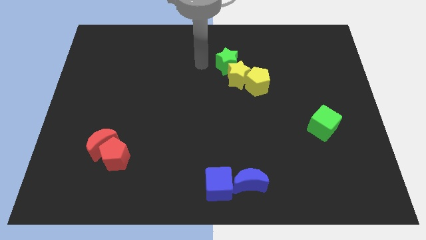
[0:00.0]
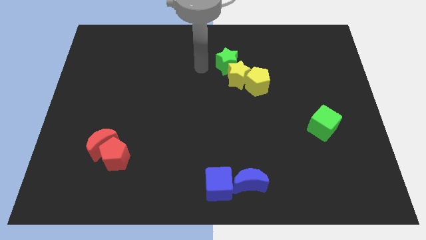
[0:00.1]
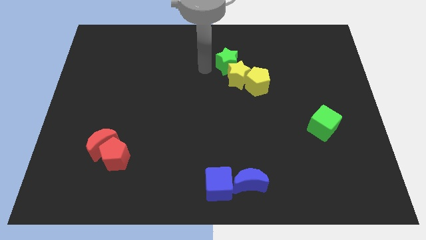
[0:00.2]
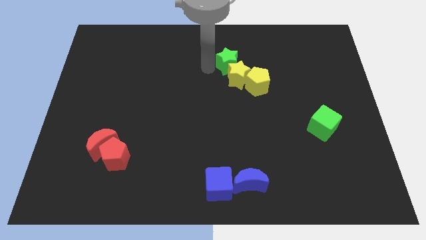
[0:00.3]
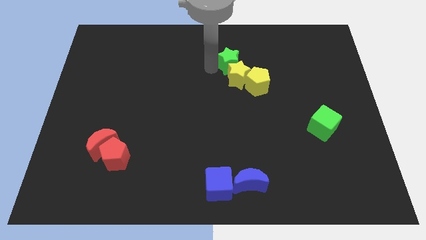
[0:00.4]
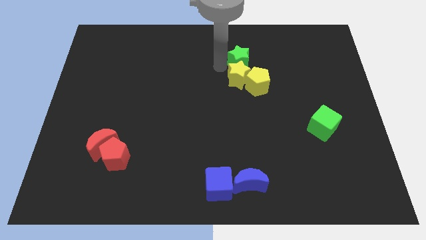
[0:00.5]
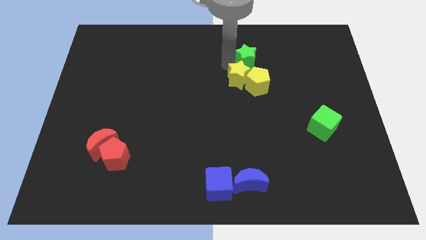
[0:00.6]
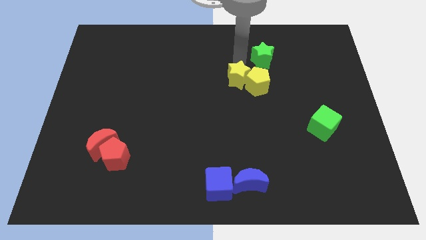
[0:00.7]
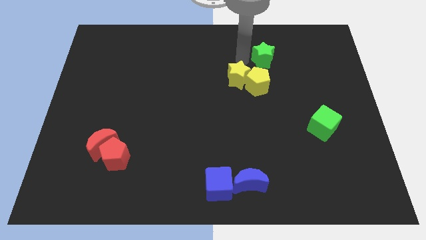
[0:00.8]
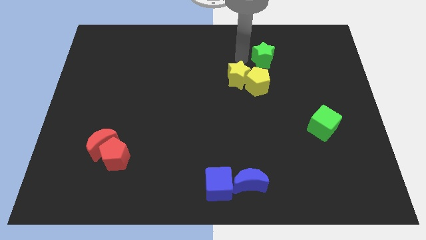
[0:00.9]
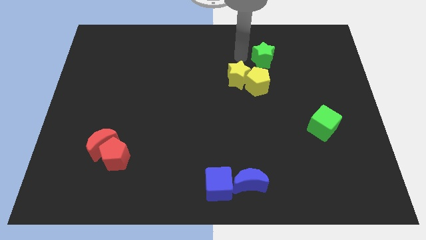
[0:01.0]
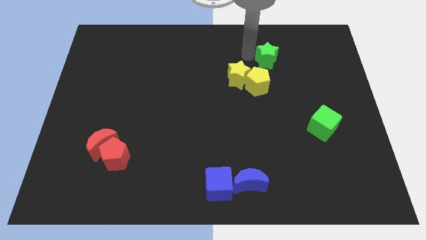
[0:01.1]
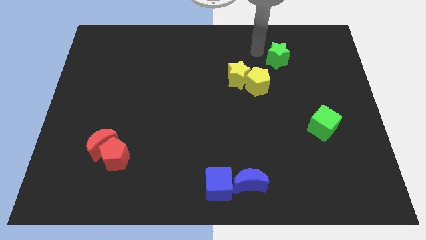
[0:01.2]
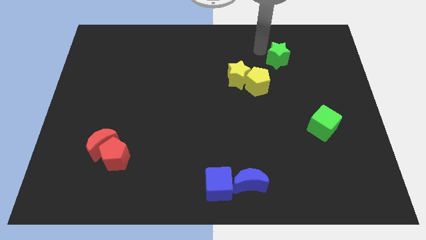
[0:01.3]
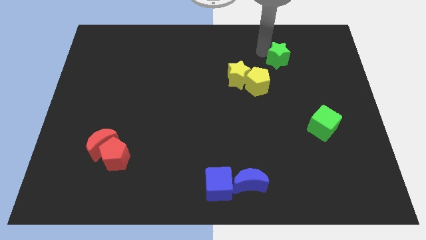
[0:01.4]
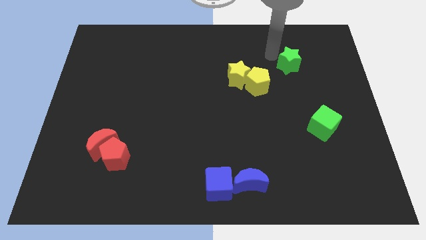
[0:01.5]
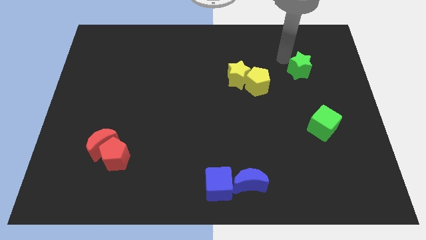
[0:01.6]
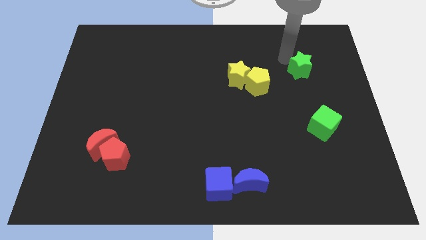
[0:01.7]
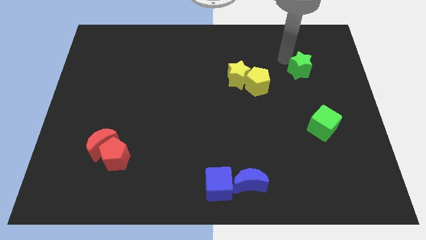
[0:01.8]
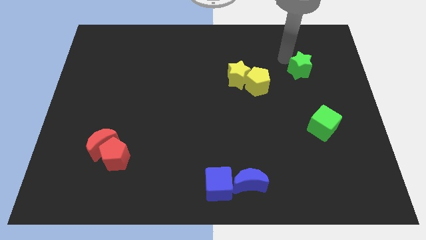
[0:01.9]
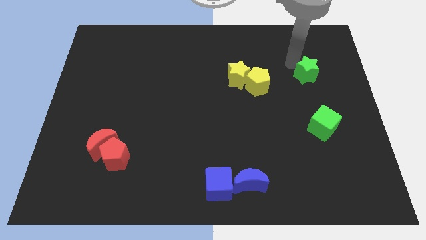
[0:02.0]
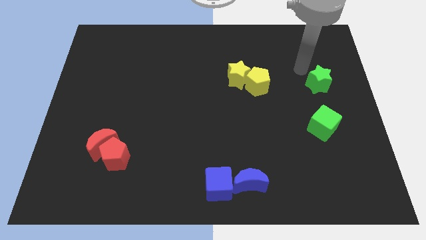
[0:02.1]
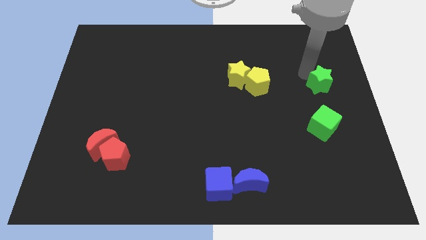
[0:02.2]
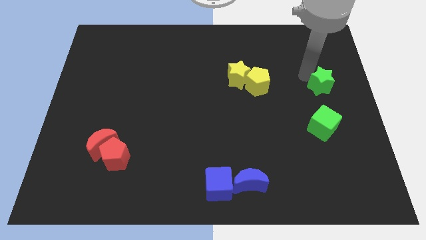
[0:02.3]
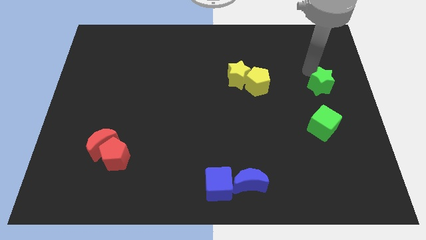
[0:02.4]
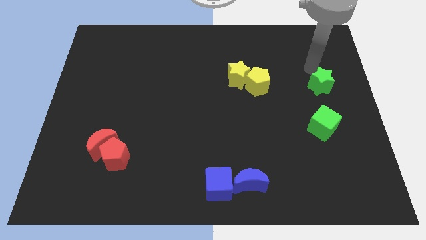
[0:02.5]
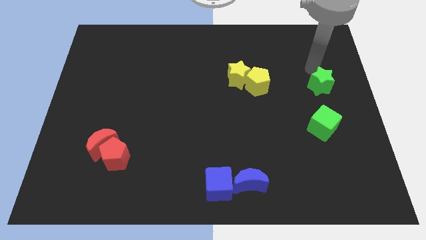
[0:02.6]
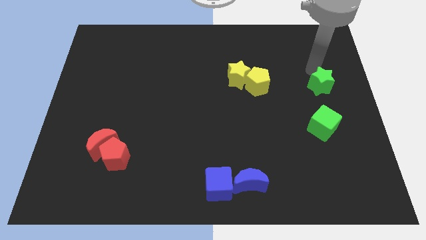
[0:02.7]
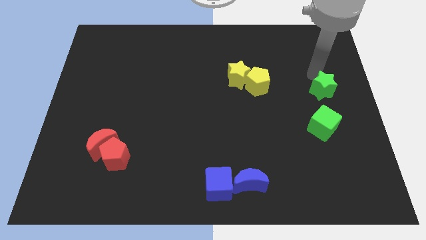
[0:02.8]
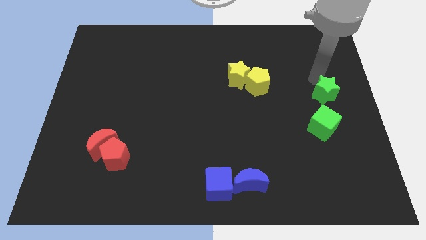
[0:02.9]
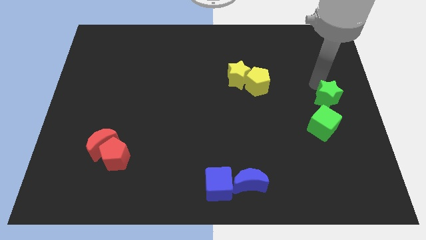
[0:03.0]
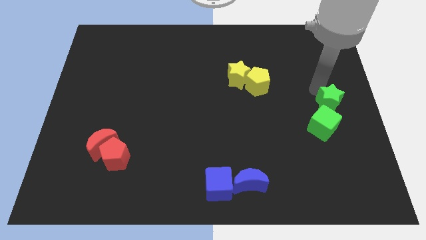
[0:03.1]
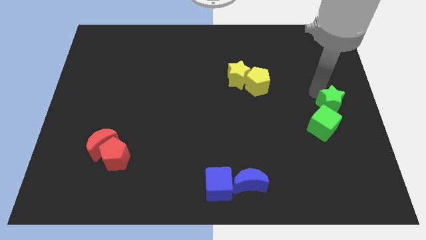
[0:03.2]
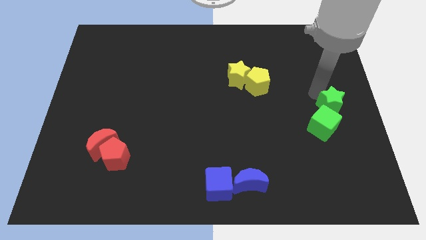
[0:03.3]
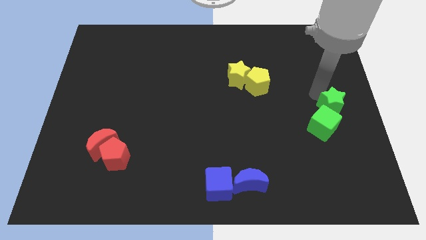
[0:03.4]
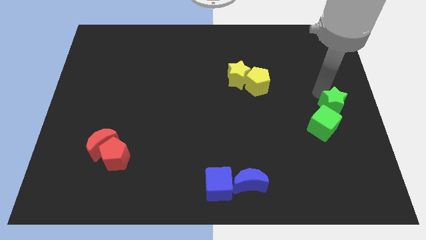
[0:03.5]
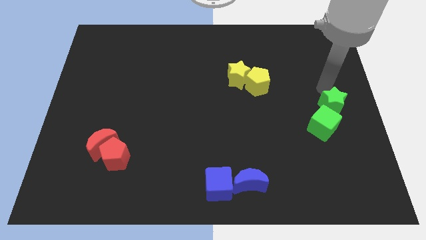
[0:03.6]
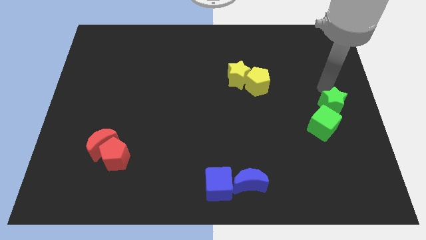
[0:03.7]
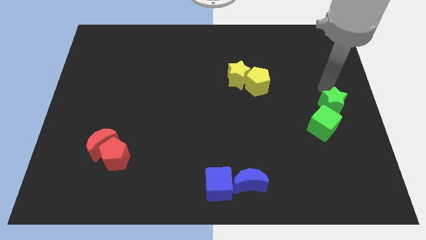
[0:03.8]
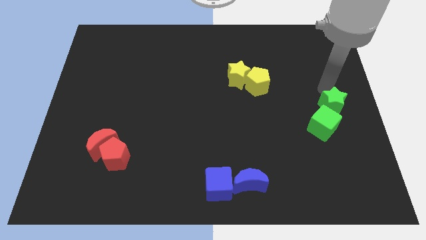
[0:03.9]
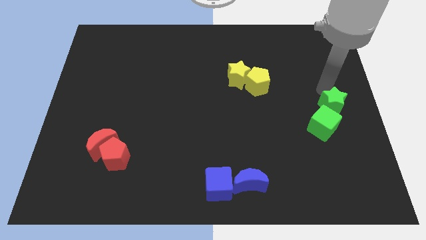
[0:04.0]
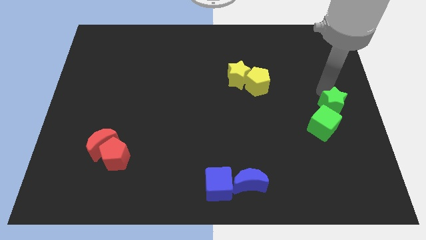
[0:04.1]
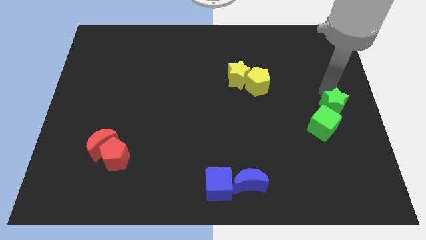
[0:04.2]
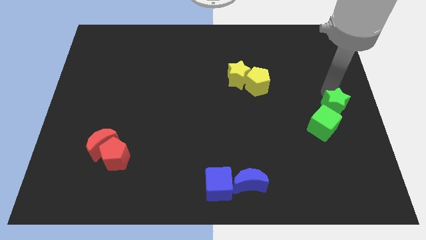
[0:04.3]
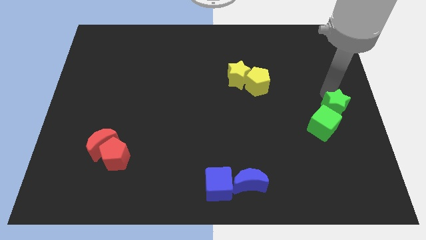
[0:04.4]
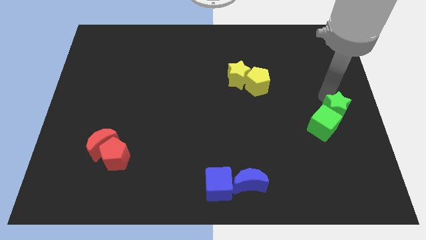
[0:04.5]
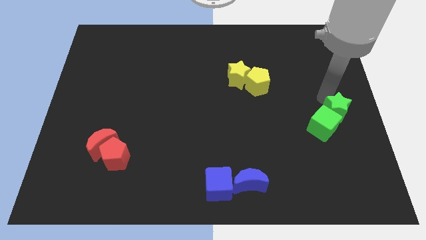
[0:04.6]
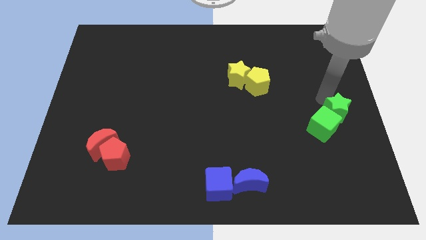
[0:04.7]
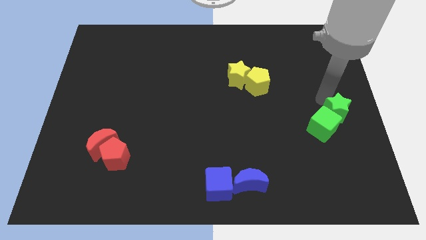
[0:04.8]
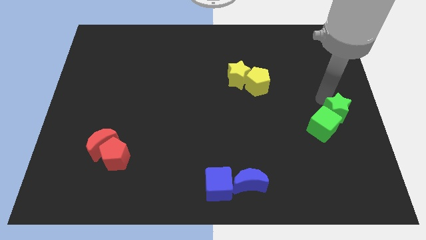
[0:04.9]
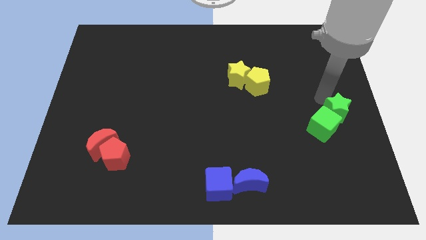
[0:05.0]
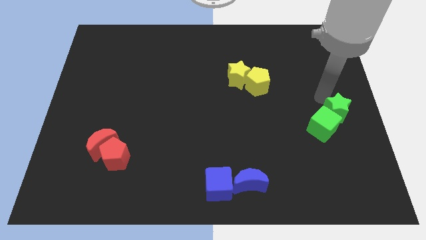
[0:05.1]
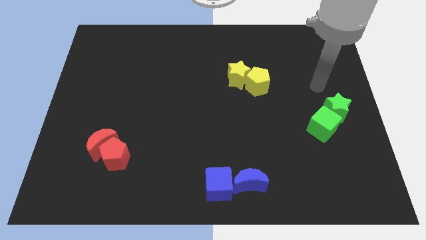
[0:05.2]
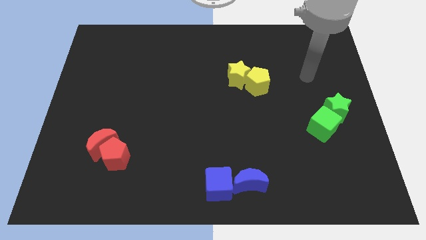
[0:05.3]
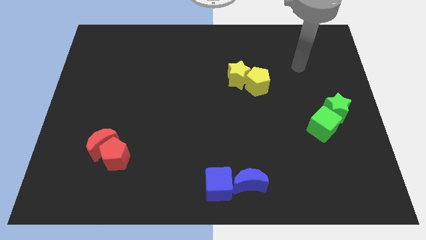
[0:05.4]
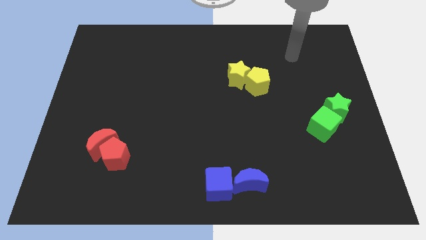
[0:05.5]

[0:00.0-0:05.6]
drag the green star close to the green cube

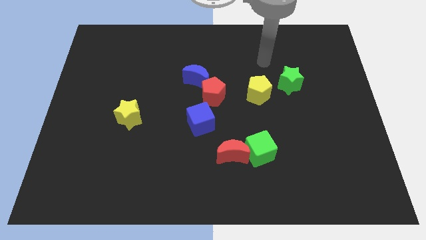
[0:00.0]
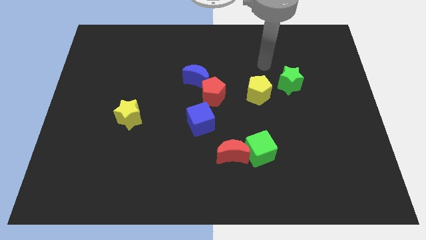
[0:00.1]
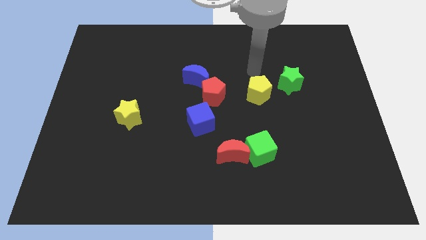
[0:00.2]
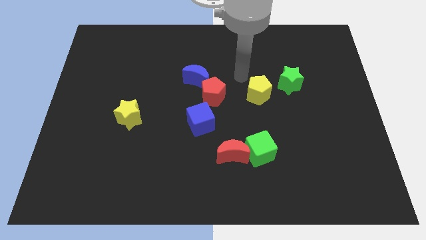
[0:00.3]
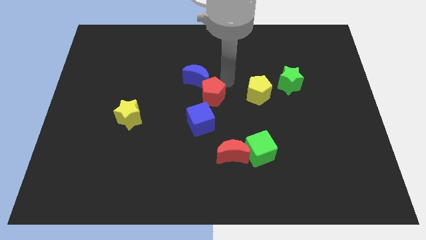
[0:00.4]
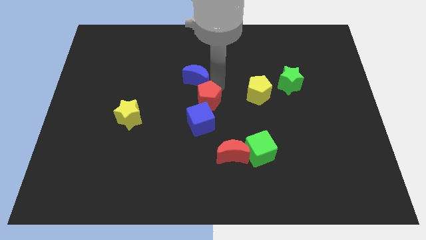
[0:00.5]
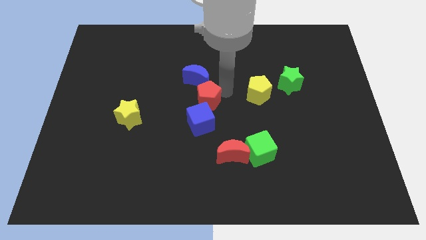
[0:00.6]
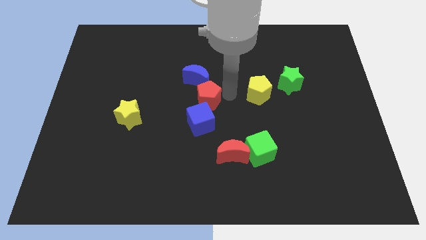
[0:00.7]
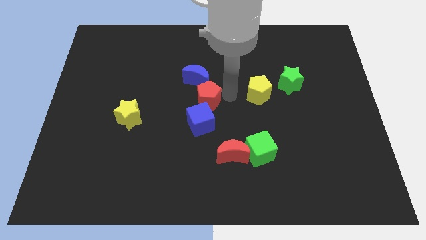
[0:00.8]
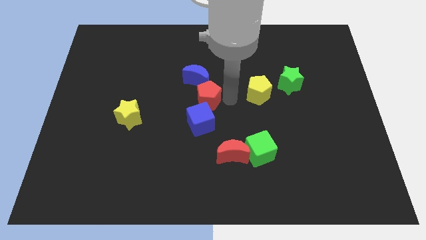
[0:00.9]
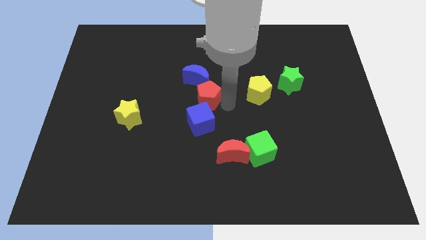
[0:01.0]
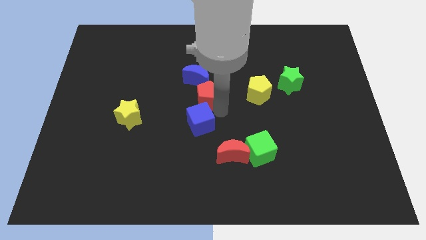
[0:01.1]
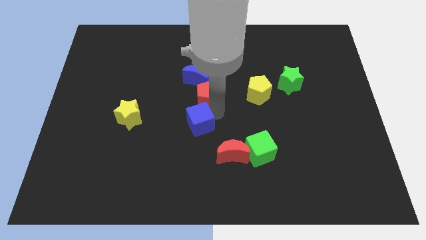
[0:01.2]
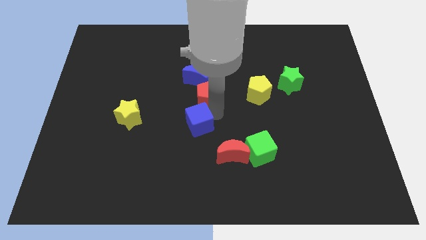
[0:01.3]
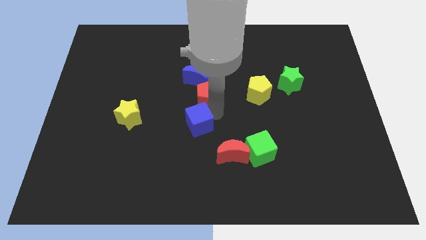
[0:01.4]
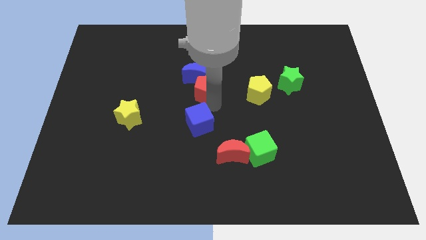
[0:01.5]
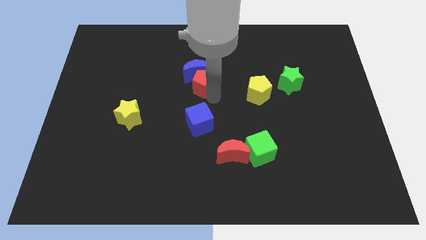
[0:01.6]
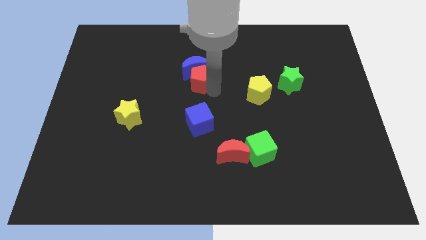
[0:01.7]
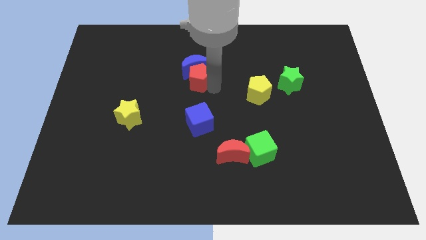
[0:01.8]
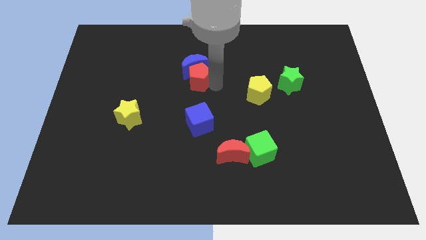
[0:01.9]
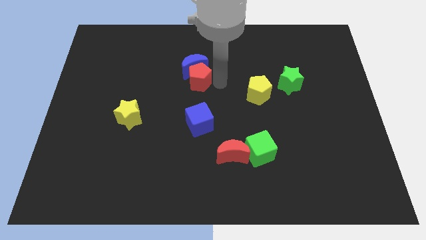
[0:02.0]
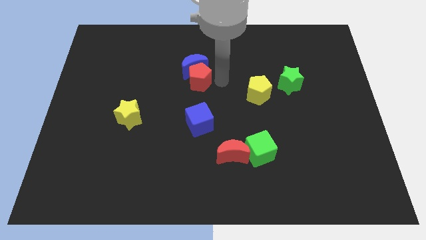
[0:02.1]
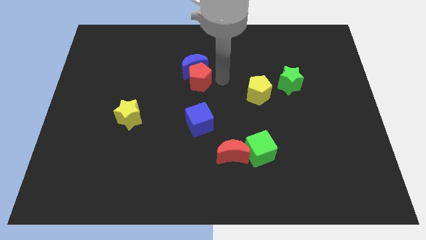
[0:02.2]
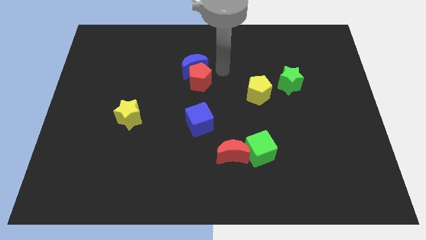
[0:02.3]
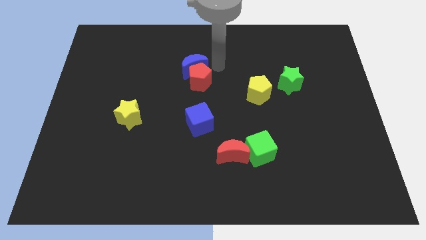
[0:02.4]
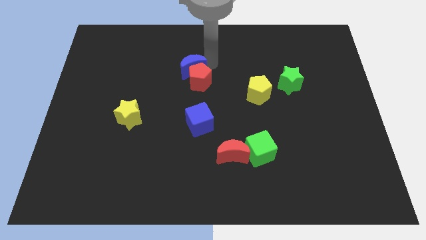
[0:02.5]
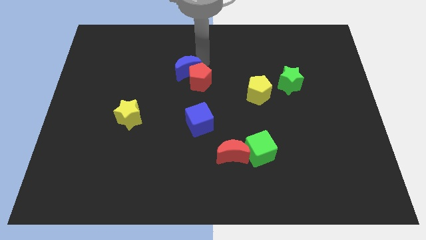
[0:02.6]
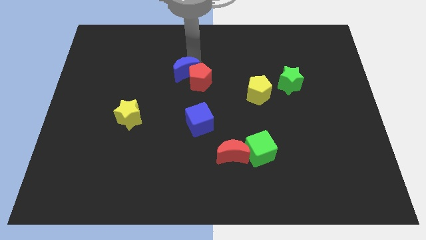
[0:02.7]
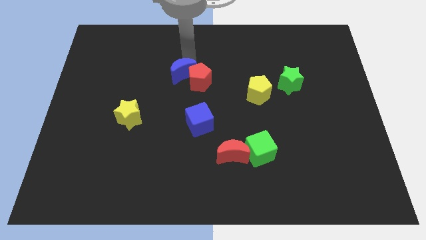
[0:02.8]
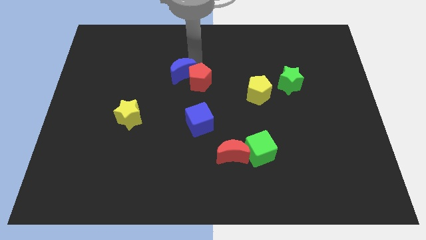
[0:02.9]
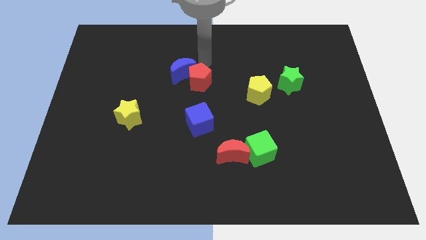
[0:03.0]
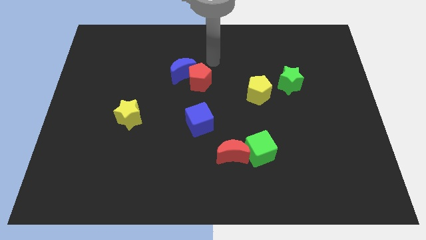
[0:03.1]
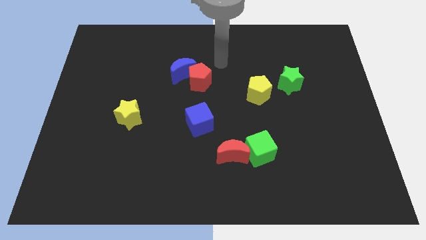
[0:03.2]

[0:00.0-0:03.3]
push red pentagon and blue crescent apart from blue cube

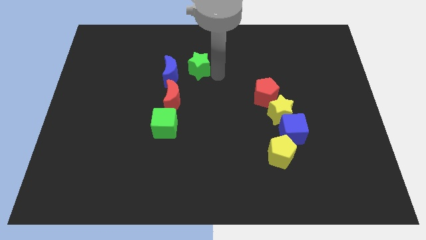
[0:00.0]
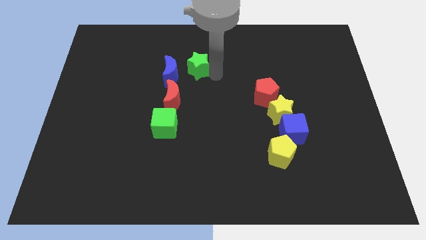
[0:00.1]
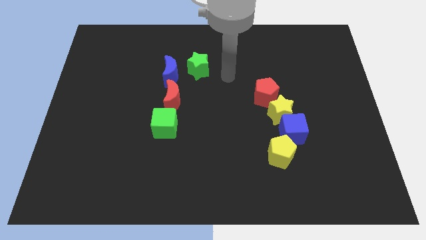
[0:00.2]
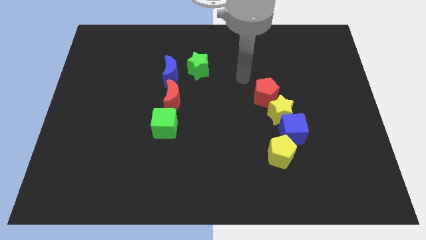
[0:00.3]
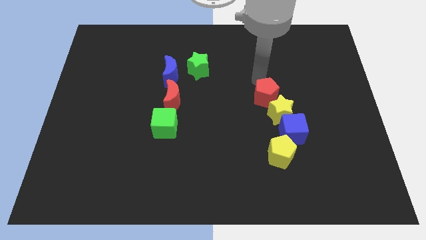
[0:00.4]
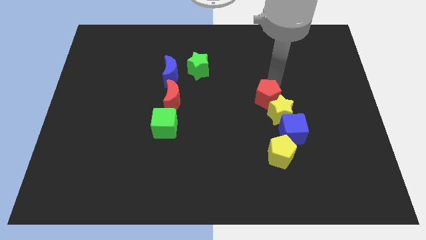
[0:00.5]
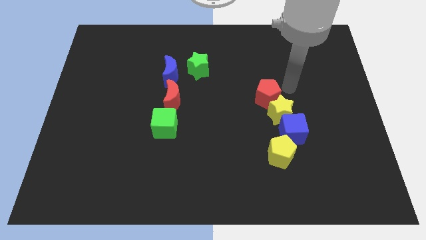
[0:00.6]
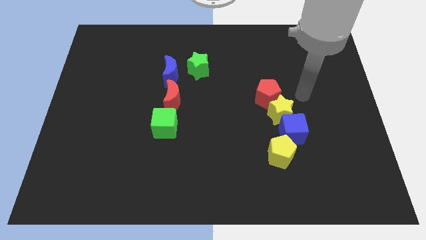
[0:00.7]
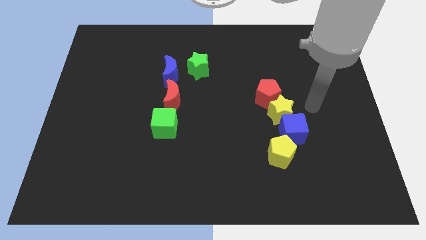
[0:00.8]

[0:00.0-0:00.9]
move the arm away from the green star
